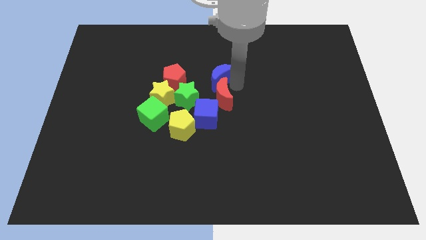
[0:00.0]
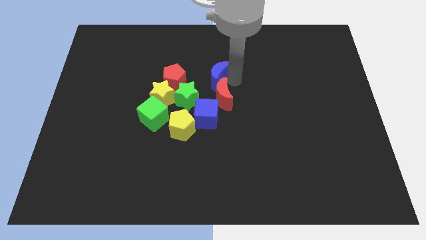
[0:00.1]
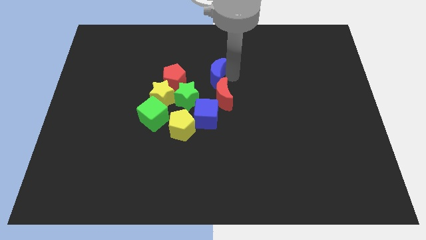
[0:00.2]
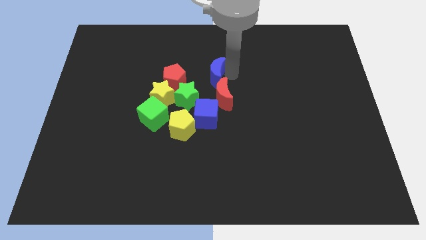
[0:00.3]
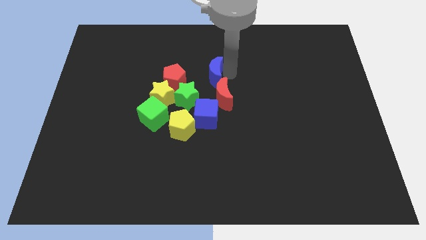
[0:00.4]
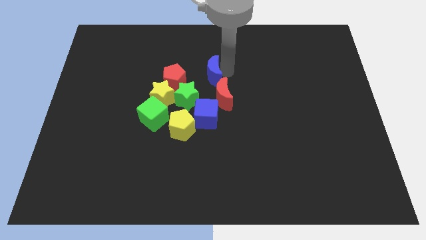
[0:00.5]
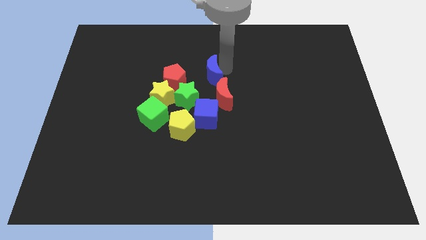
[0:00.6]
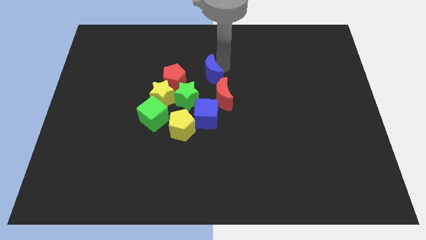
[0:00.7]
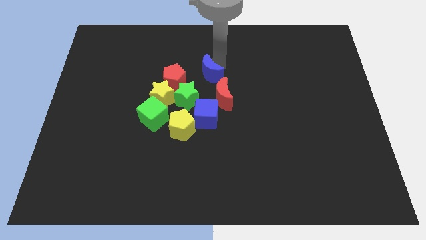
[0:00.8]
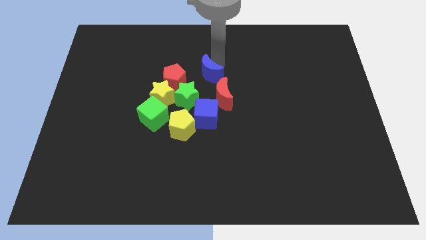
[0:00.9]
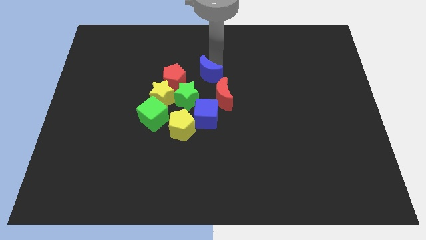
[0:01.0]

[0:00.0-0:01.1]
separate blue moon from red moon

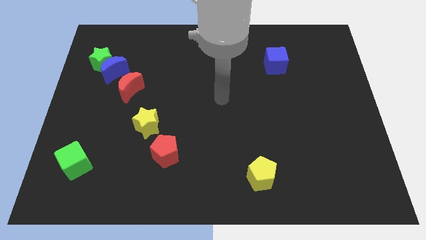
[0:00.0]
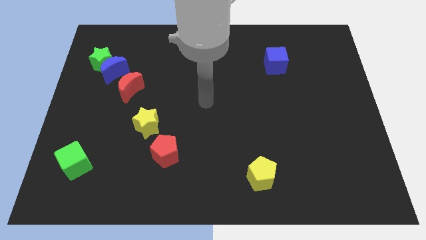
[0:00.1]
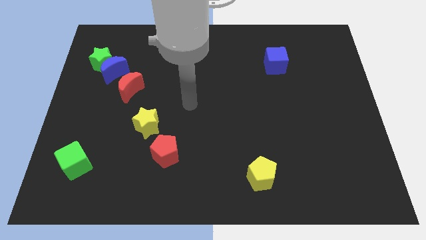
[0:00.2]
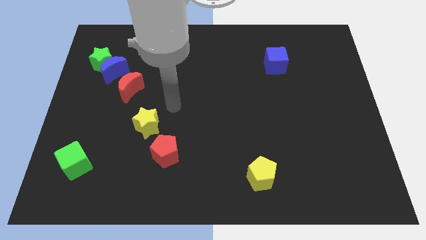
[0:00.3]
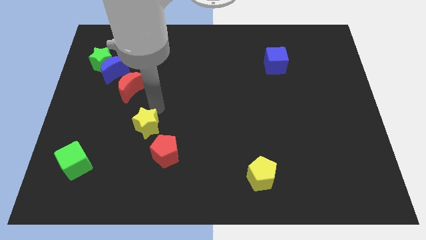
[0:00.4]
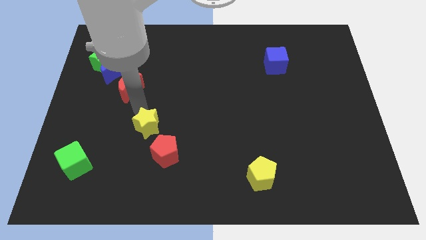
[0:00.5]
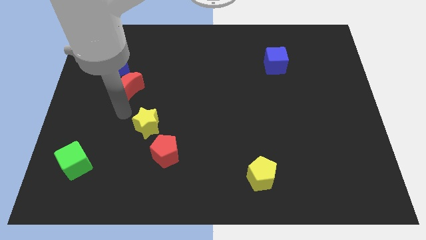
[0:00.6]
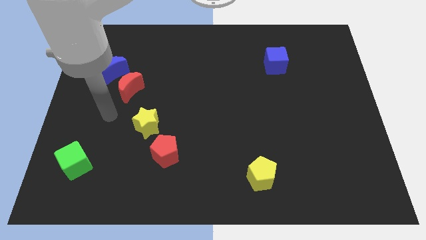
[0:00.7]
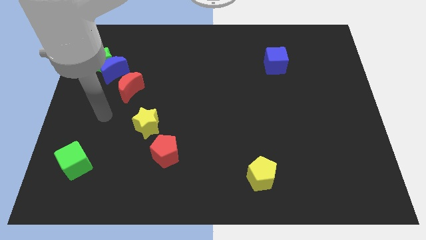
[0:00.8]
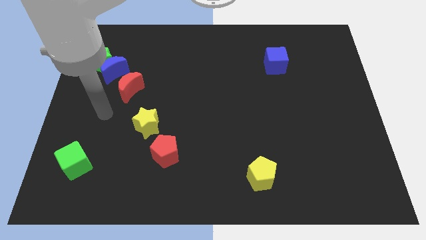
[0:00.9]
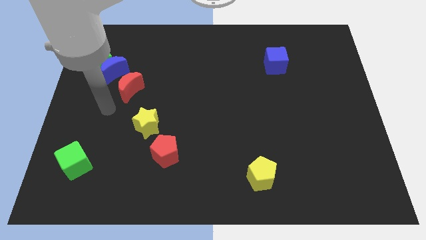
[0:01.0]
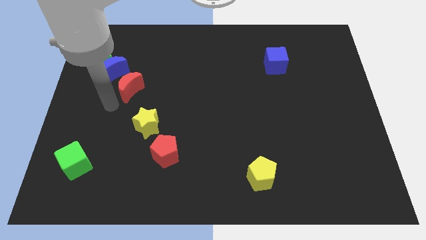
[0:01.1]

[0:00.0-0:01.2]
move your arm towards the red crescent

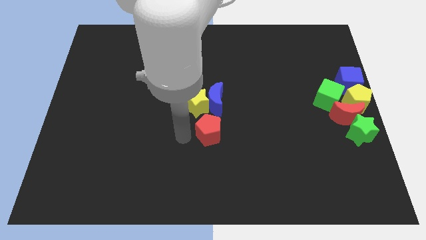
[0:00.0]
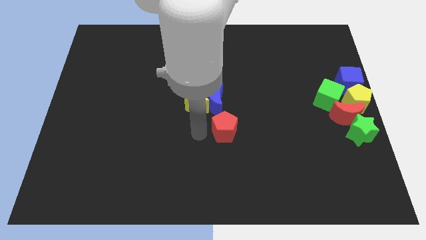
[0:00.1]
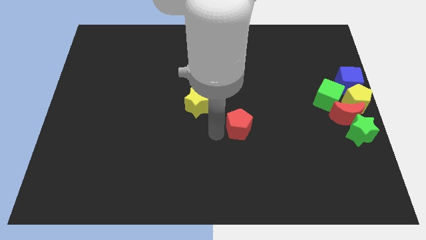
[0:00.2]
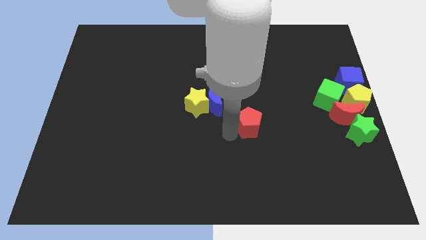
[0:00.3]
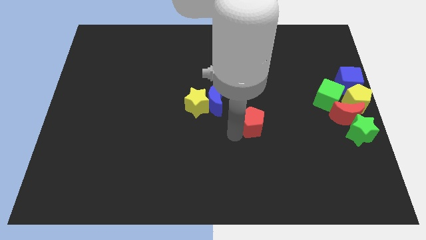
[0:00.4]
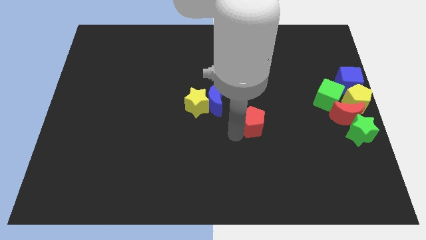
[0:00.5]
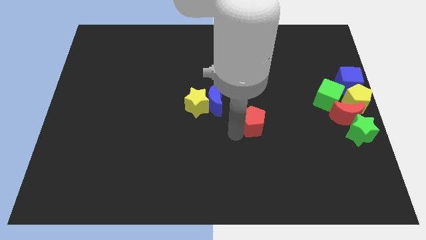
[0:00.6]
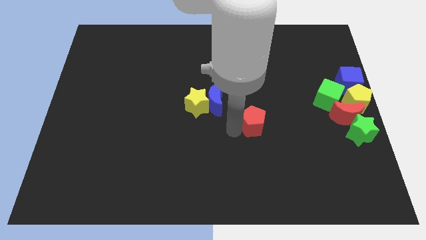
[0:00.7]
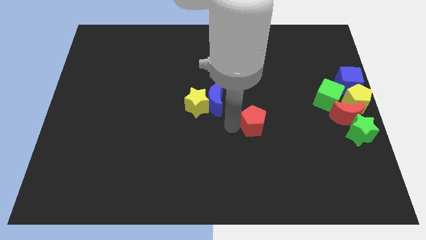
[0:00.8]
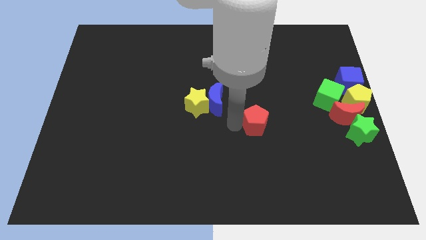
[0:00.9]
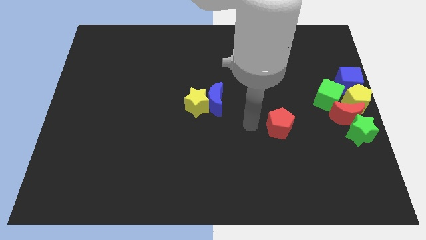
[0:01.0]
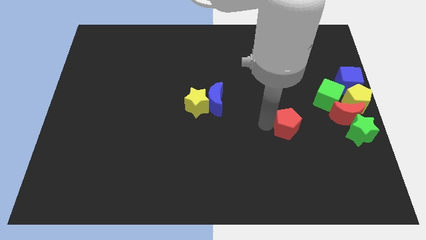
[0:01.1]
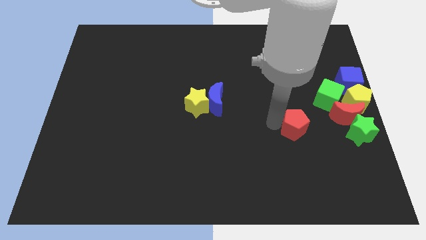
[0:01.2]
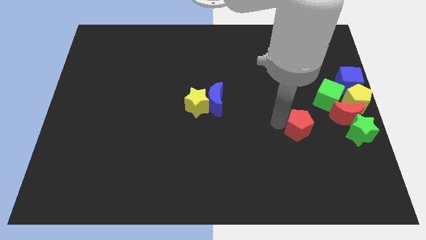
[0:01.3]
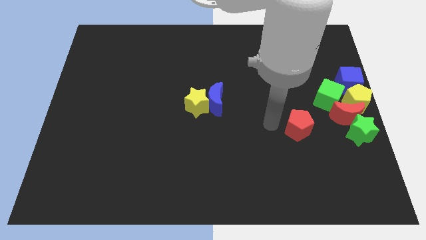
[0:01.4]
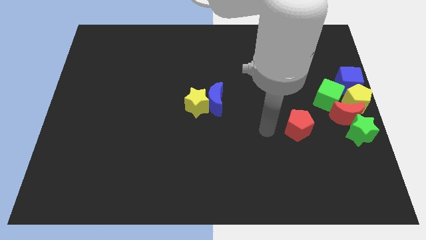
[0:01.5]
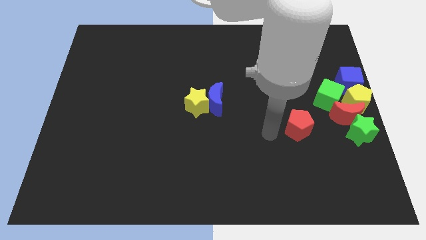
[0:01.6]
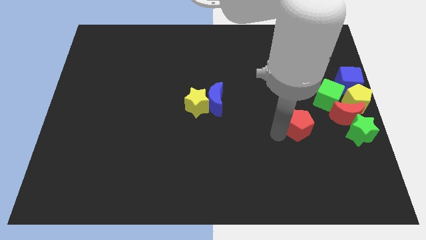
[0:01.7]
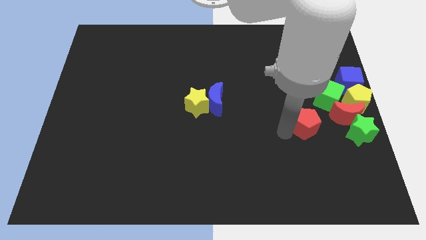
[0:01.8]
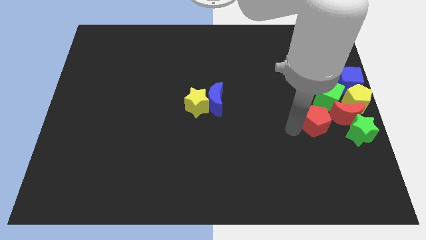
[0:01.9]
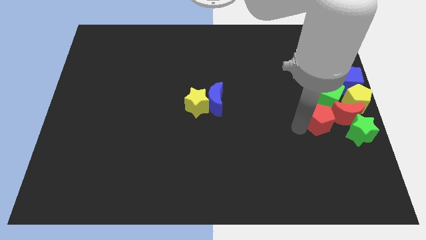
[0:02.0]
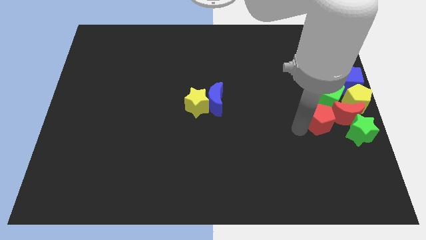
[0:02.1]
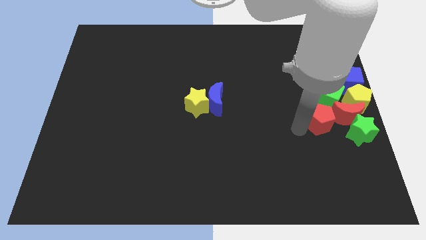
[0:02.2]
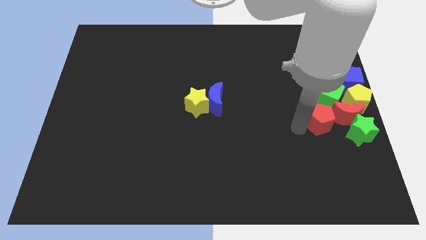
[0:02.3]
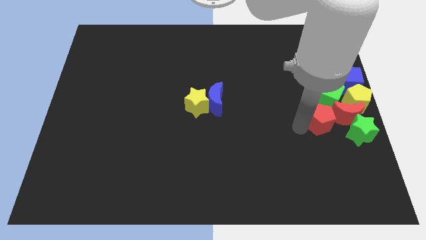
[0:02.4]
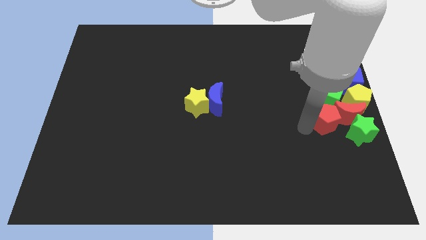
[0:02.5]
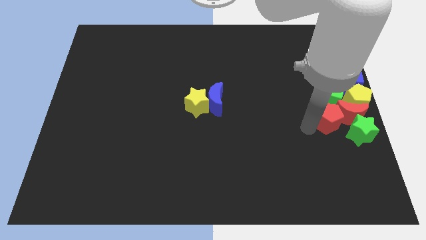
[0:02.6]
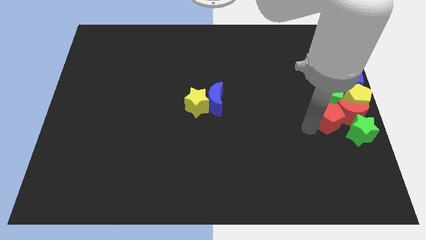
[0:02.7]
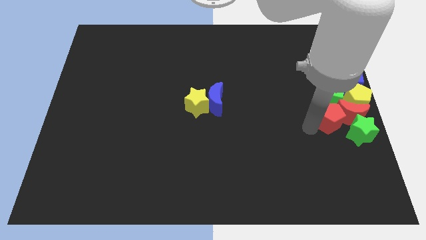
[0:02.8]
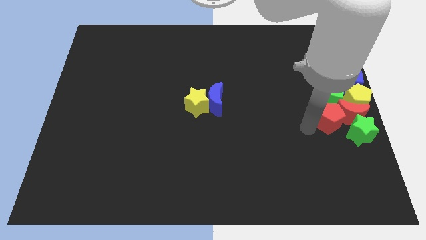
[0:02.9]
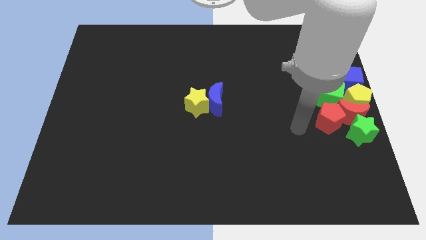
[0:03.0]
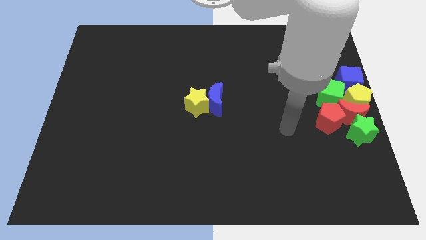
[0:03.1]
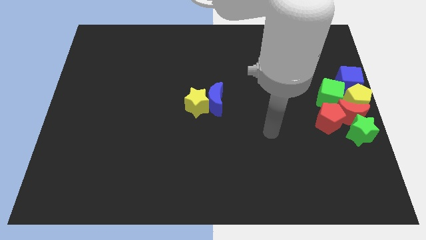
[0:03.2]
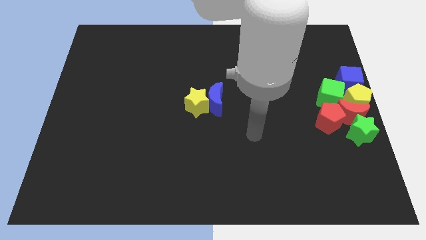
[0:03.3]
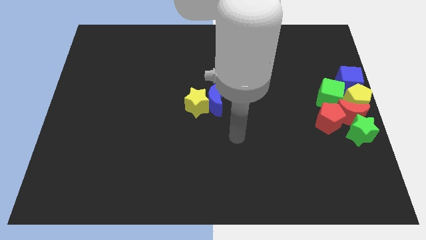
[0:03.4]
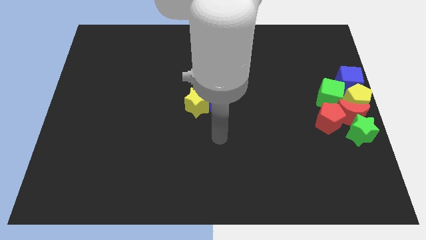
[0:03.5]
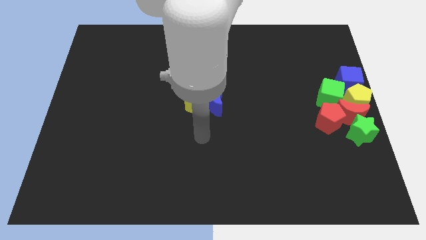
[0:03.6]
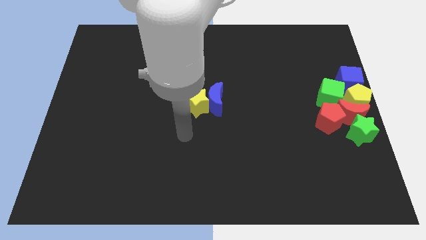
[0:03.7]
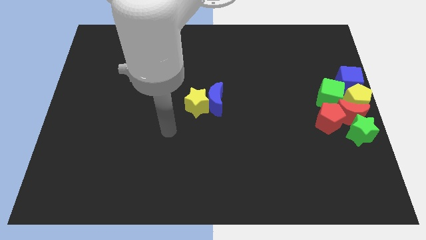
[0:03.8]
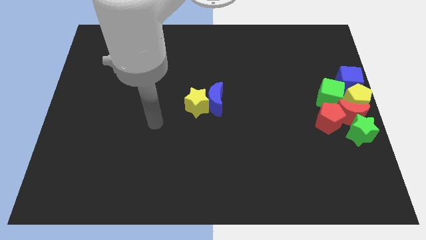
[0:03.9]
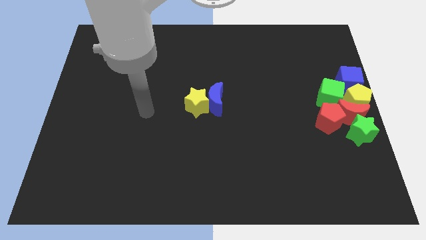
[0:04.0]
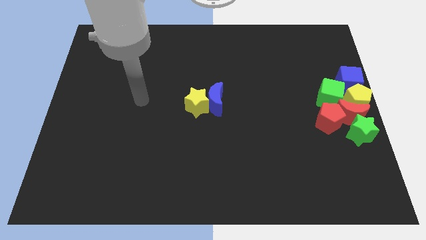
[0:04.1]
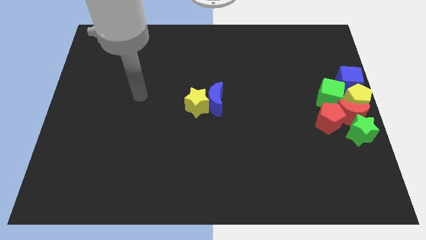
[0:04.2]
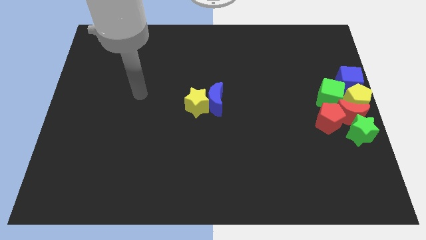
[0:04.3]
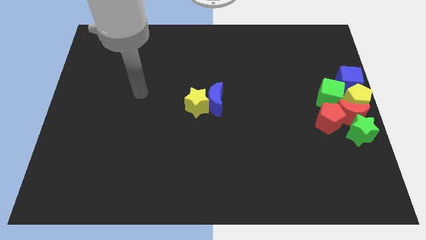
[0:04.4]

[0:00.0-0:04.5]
move the red pentagon to the left side of the red crescent

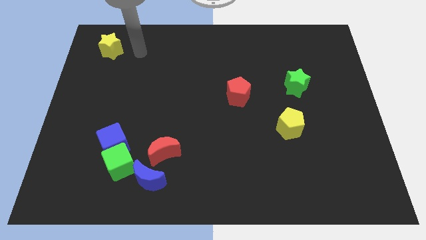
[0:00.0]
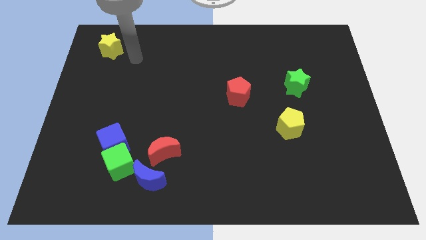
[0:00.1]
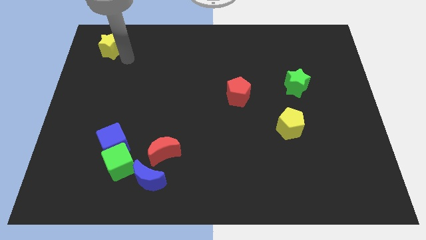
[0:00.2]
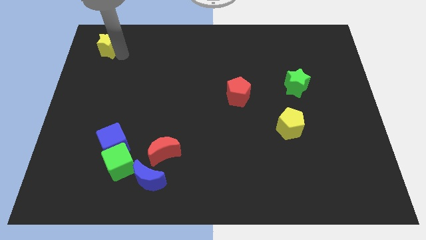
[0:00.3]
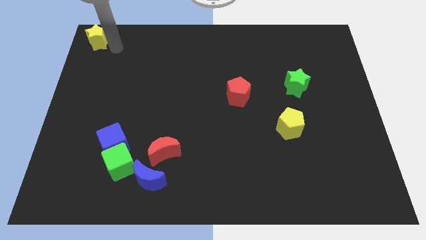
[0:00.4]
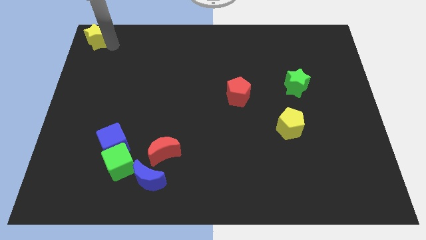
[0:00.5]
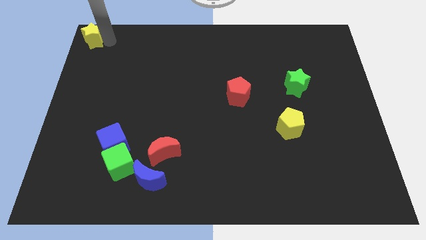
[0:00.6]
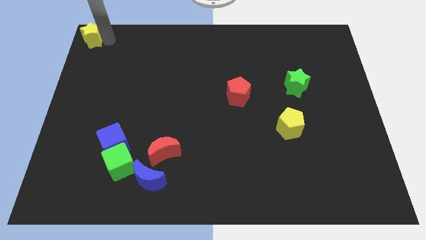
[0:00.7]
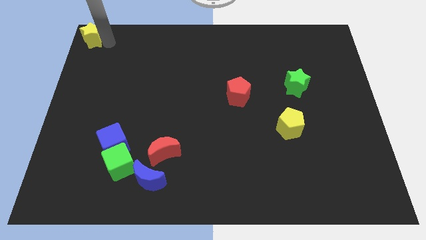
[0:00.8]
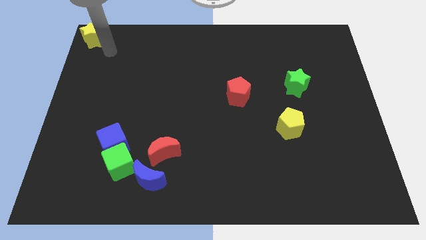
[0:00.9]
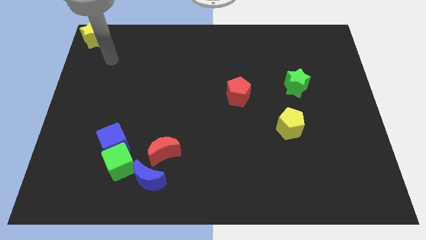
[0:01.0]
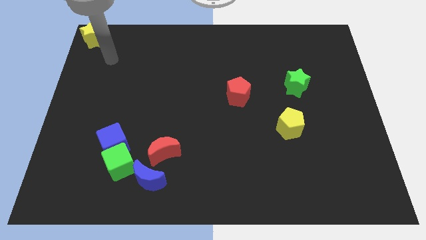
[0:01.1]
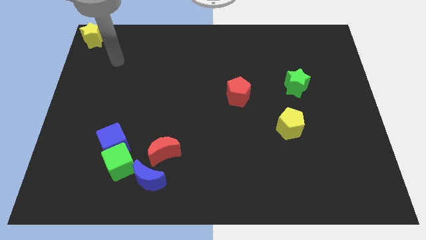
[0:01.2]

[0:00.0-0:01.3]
place the yellow star at top left corner of the board

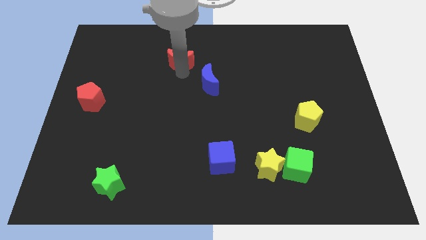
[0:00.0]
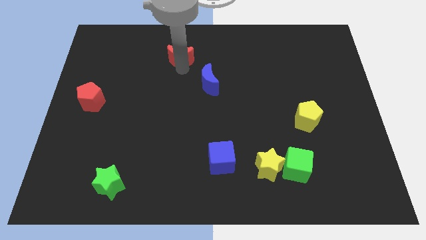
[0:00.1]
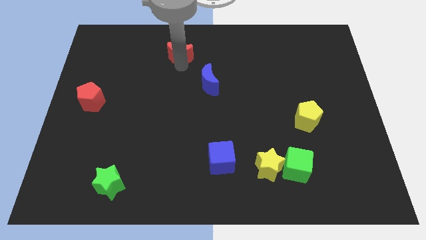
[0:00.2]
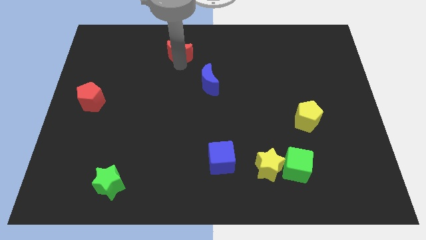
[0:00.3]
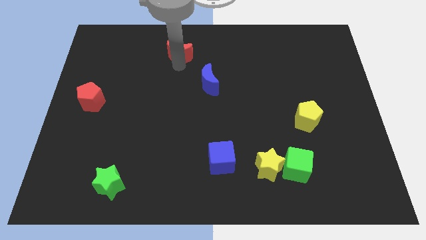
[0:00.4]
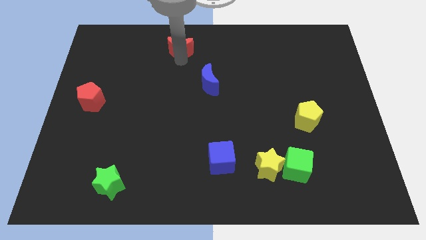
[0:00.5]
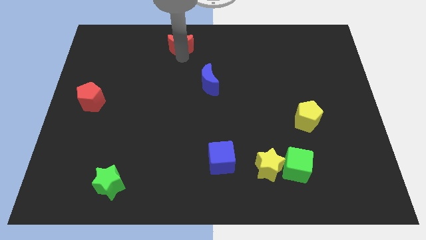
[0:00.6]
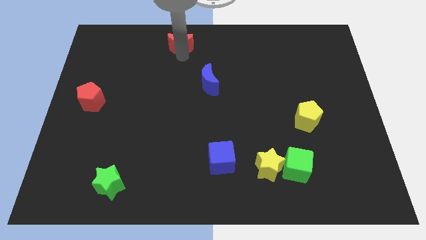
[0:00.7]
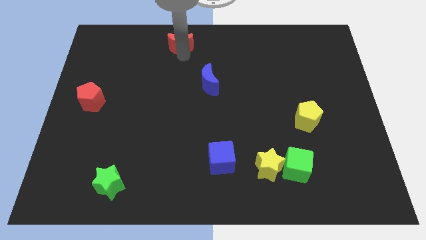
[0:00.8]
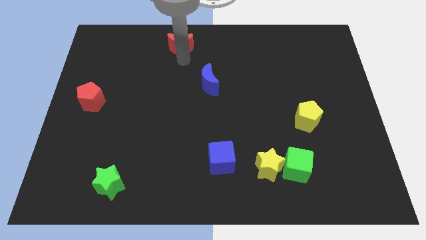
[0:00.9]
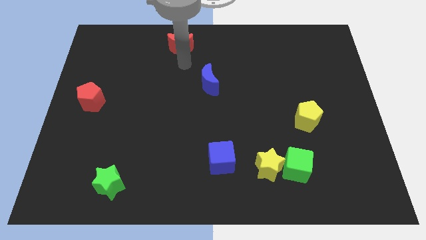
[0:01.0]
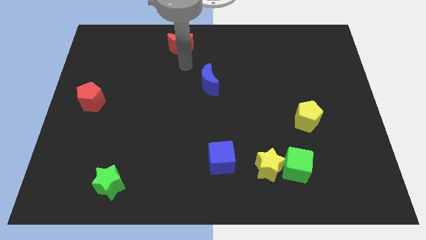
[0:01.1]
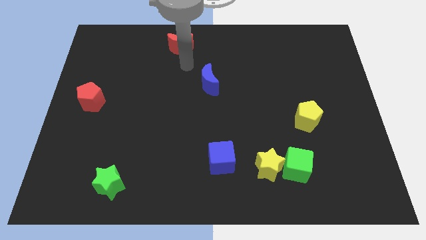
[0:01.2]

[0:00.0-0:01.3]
push the red crescent to the top of the board
